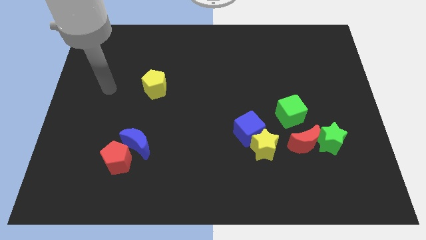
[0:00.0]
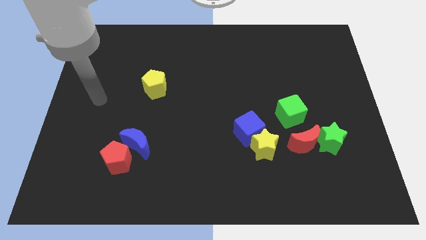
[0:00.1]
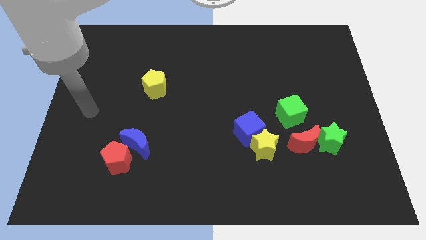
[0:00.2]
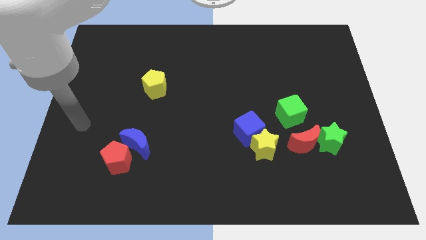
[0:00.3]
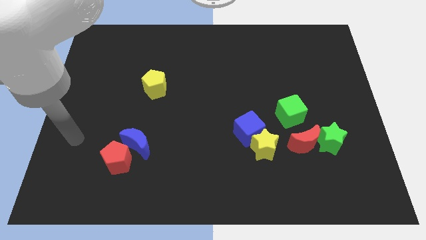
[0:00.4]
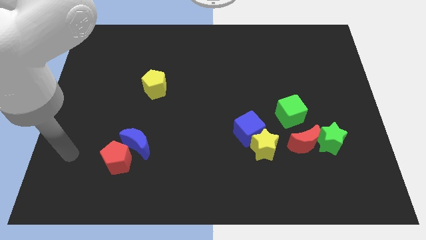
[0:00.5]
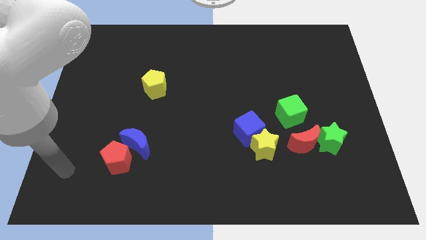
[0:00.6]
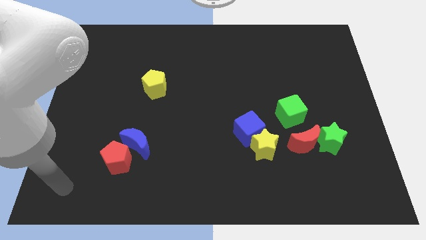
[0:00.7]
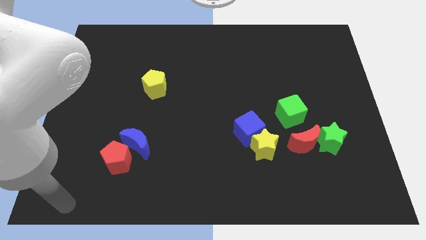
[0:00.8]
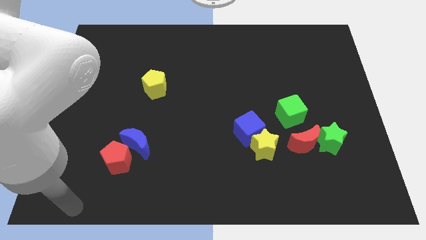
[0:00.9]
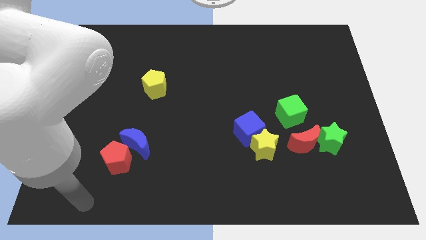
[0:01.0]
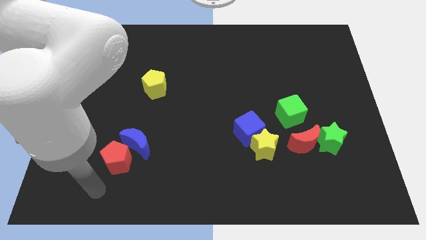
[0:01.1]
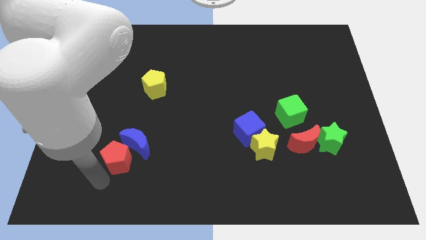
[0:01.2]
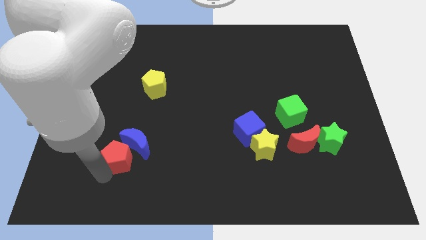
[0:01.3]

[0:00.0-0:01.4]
move your arm towards the red pentagon

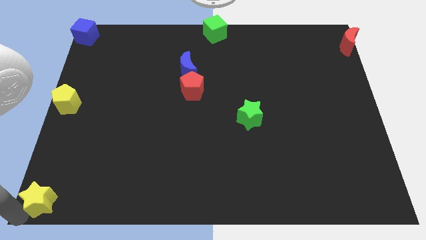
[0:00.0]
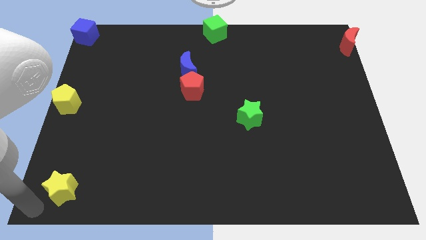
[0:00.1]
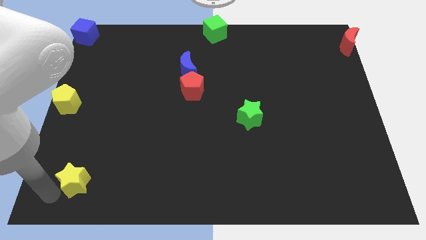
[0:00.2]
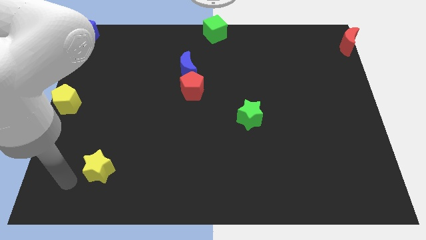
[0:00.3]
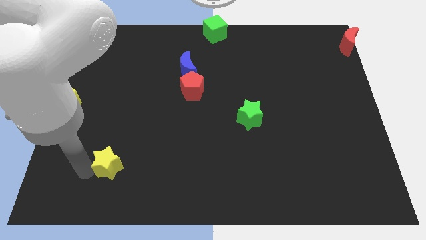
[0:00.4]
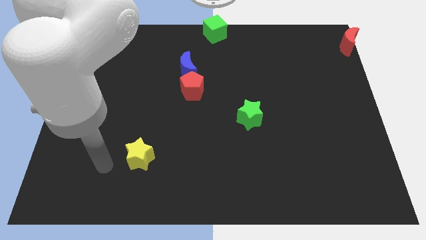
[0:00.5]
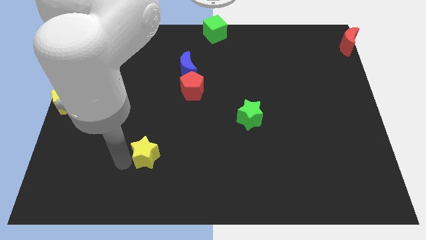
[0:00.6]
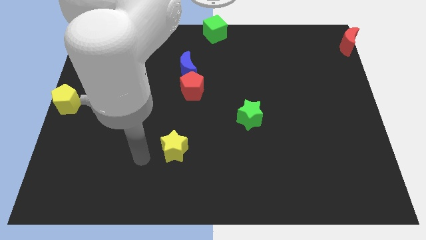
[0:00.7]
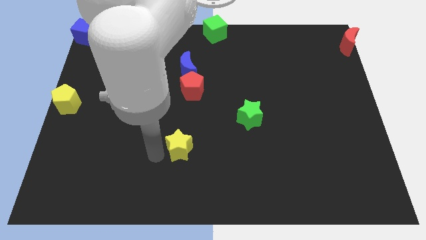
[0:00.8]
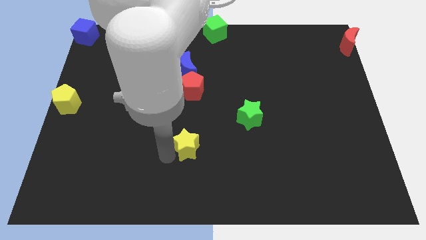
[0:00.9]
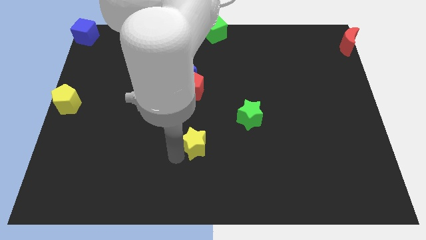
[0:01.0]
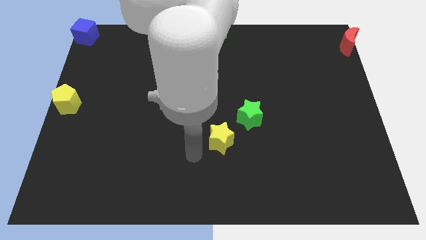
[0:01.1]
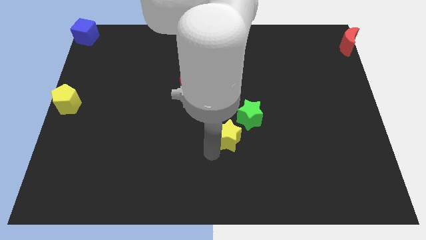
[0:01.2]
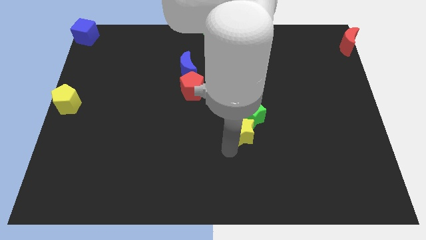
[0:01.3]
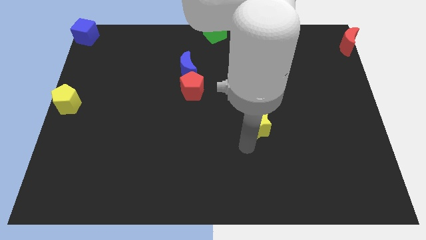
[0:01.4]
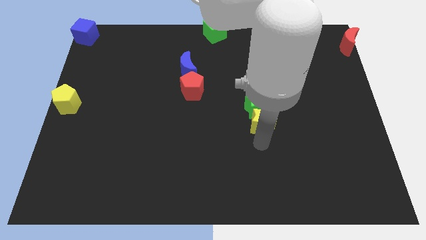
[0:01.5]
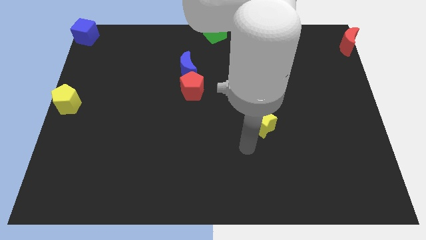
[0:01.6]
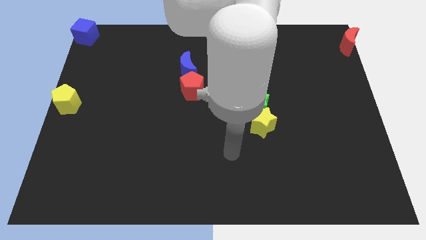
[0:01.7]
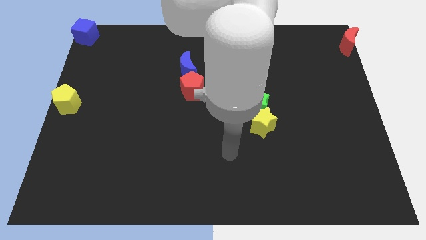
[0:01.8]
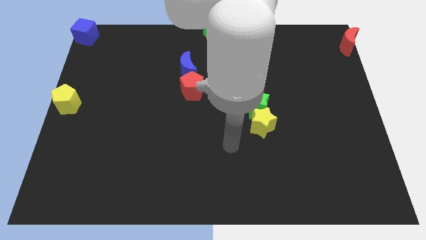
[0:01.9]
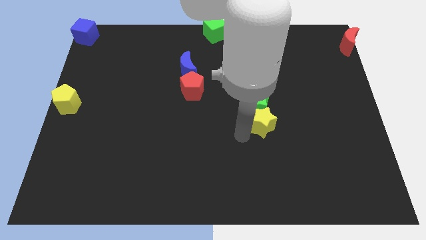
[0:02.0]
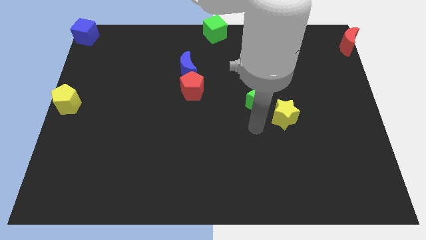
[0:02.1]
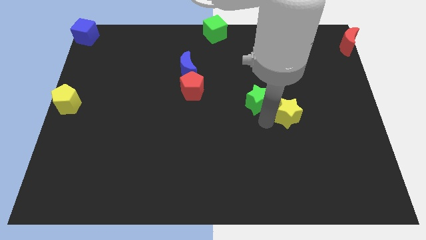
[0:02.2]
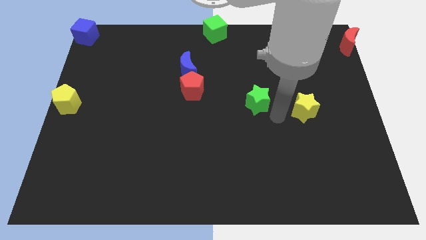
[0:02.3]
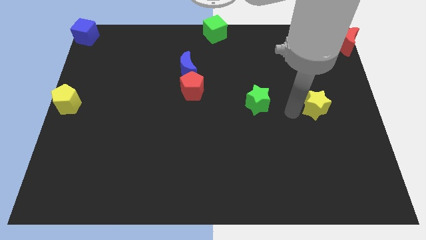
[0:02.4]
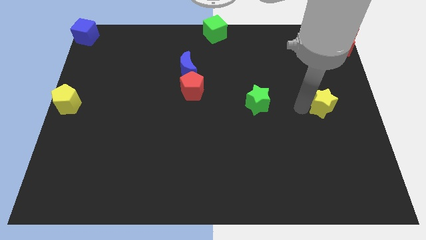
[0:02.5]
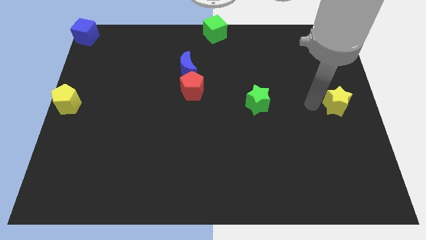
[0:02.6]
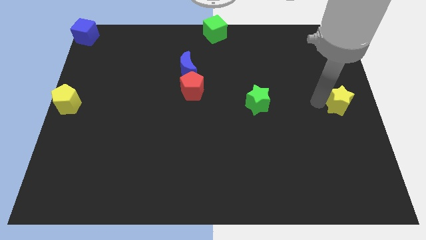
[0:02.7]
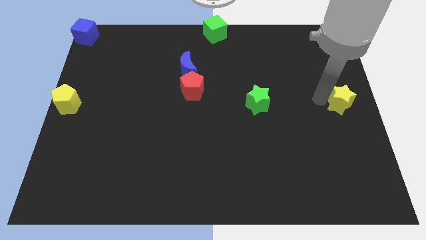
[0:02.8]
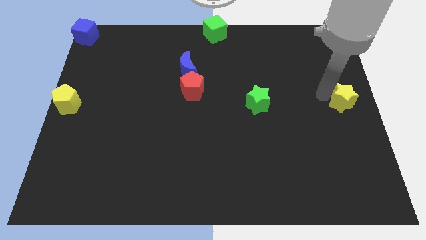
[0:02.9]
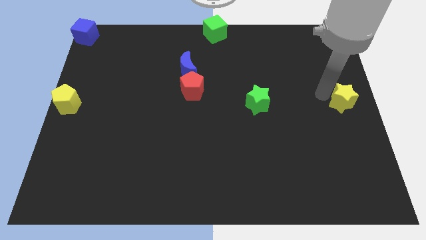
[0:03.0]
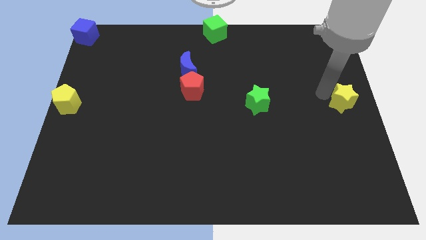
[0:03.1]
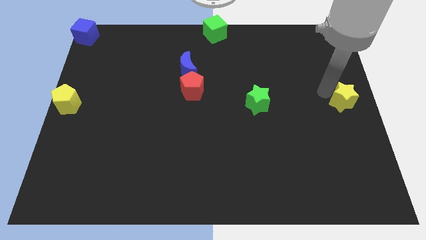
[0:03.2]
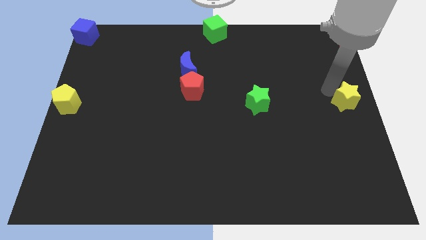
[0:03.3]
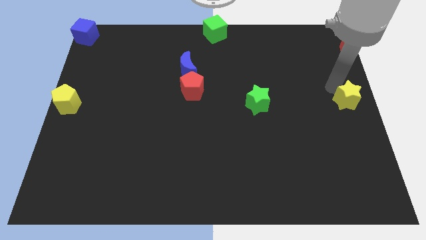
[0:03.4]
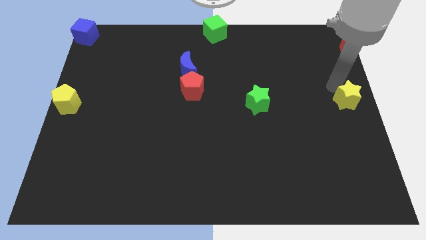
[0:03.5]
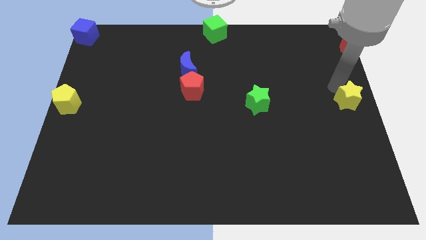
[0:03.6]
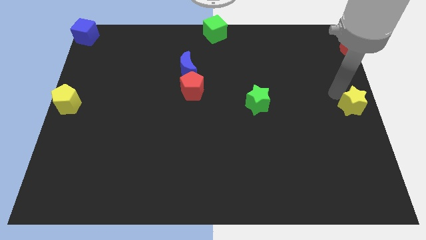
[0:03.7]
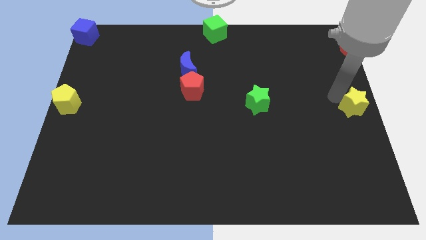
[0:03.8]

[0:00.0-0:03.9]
push the yellow star into the green star

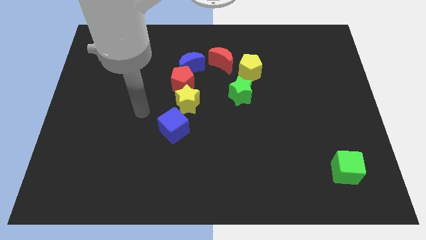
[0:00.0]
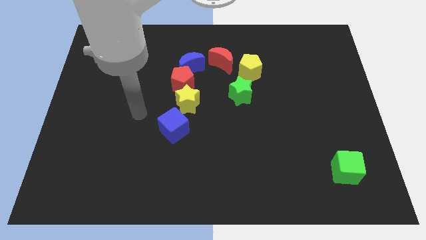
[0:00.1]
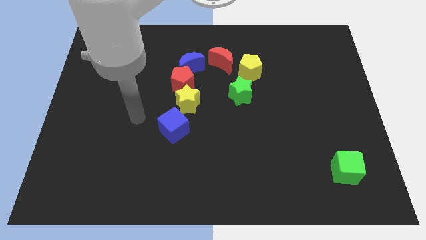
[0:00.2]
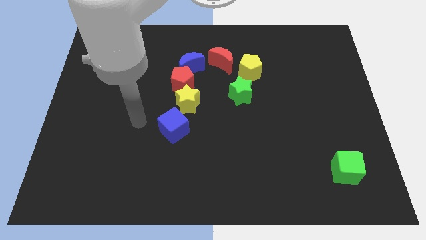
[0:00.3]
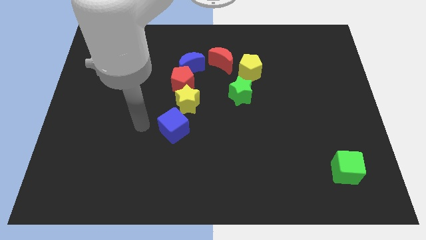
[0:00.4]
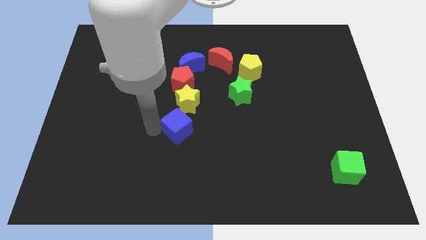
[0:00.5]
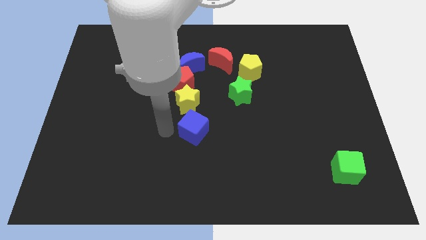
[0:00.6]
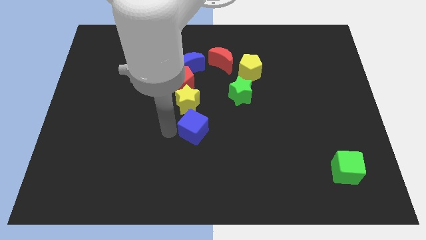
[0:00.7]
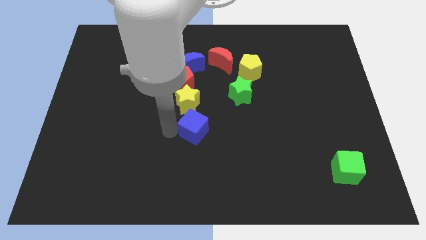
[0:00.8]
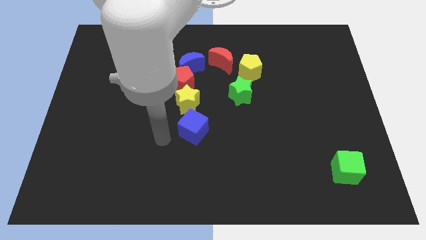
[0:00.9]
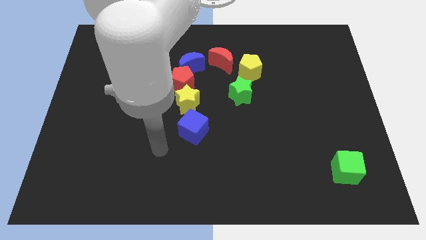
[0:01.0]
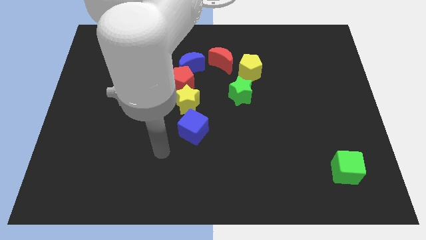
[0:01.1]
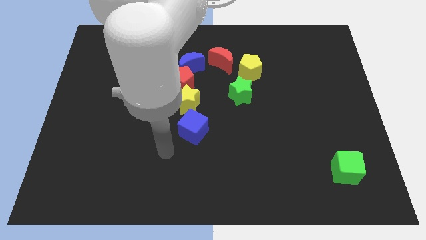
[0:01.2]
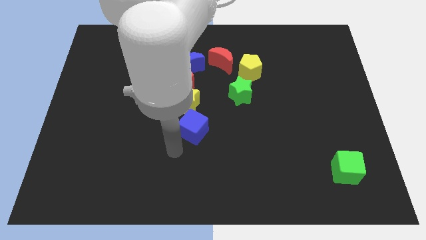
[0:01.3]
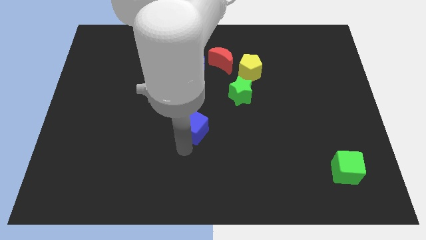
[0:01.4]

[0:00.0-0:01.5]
push the blue cube to the bottom side of the yellow star

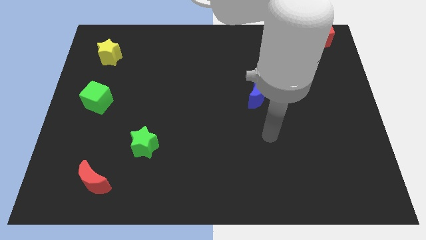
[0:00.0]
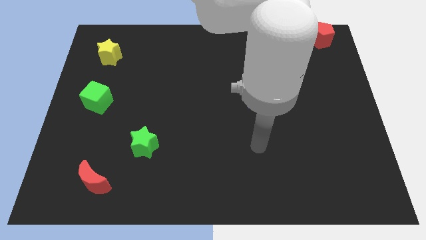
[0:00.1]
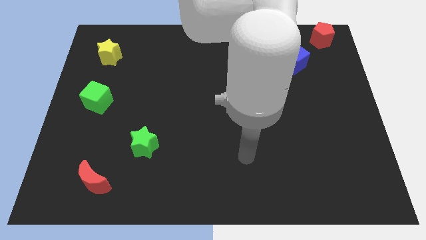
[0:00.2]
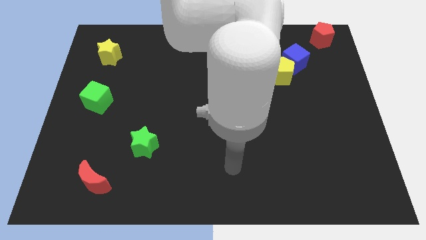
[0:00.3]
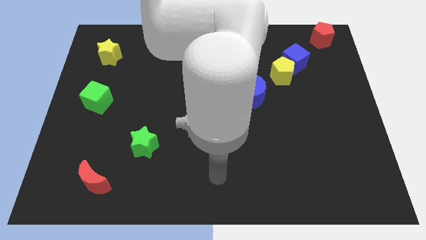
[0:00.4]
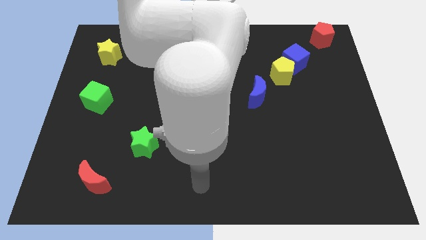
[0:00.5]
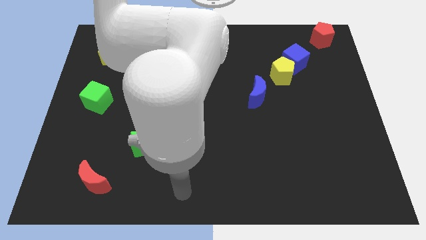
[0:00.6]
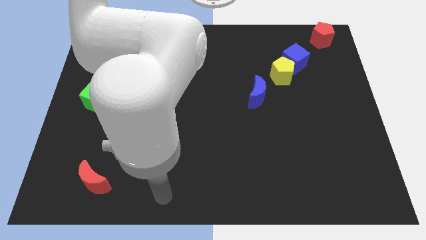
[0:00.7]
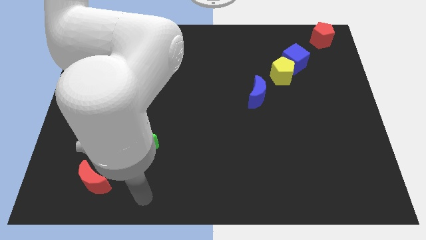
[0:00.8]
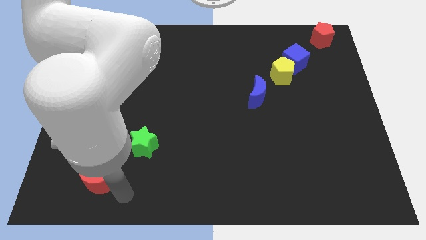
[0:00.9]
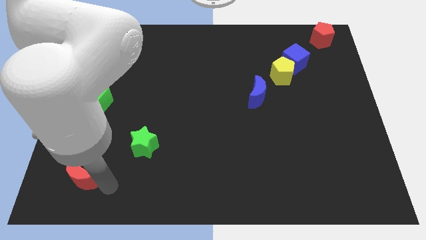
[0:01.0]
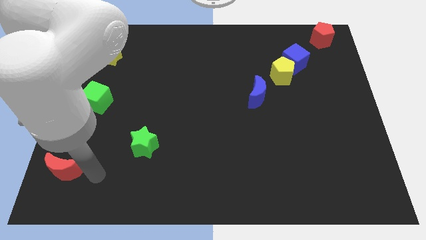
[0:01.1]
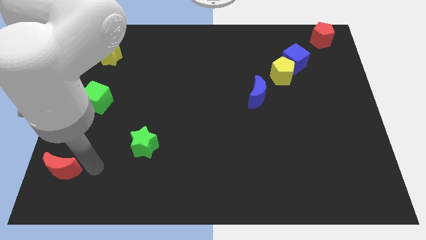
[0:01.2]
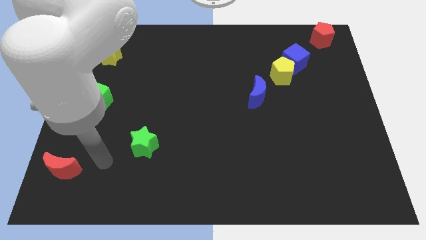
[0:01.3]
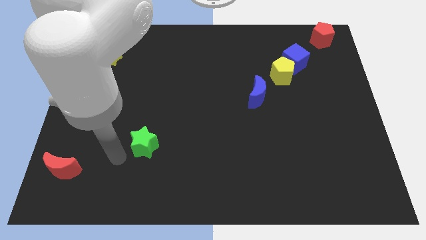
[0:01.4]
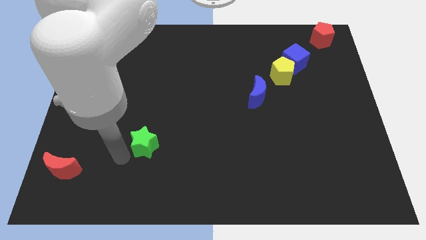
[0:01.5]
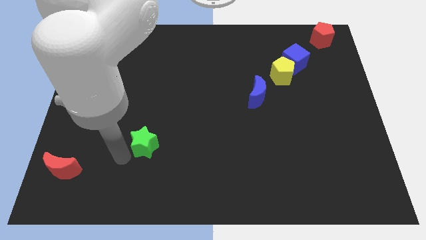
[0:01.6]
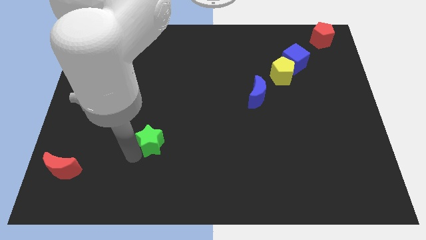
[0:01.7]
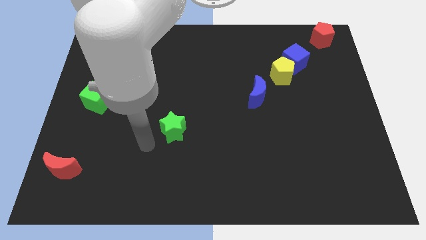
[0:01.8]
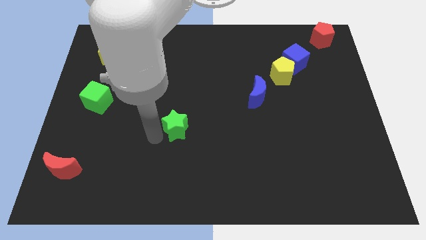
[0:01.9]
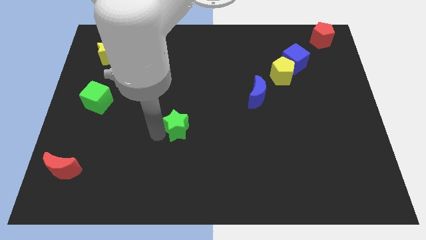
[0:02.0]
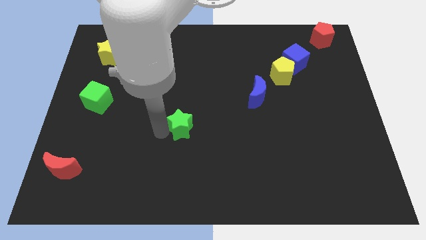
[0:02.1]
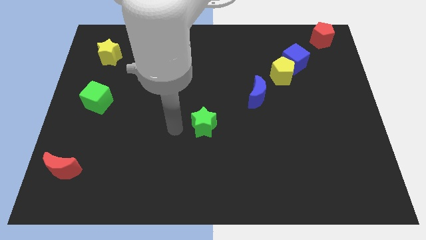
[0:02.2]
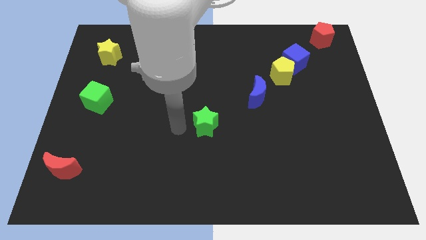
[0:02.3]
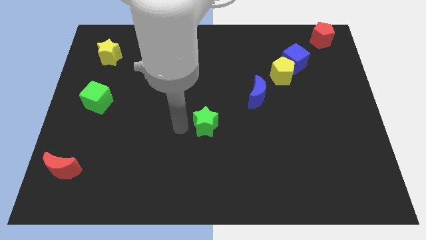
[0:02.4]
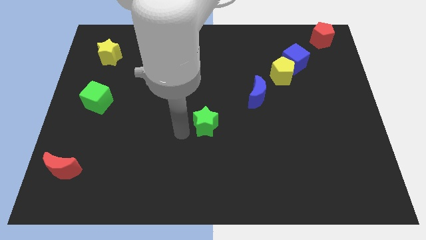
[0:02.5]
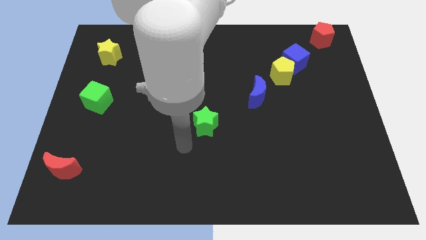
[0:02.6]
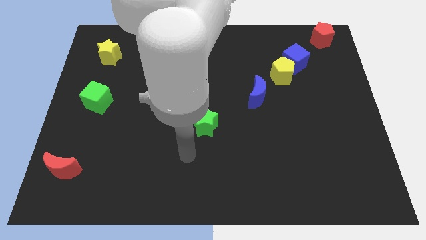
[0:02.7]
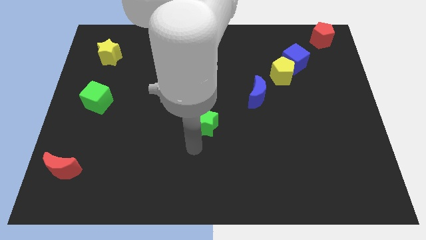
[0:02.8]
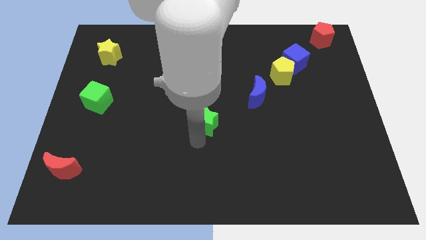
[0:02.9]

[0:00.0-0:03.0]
move the green star diagonally to the blue moon
